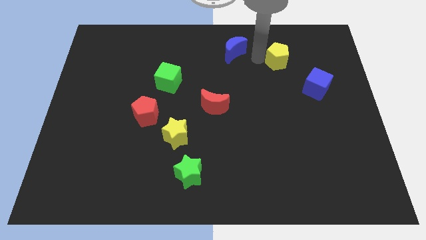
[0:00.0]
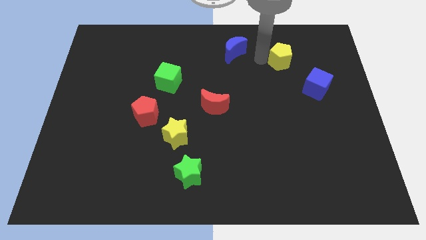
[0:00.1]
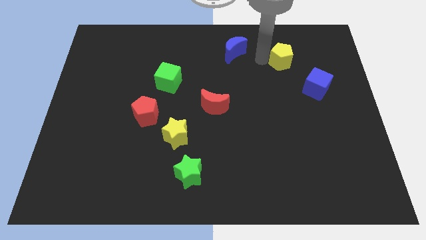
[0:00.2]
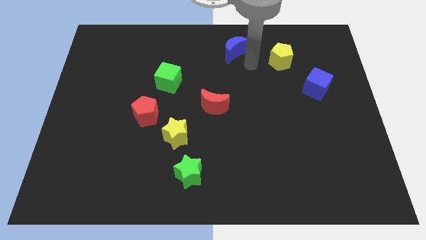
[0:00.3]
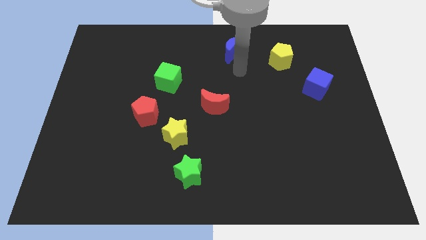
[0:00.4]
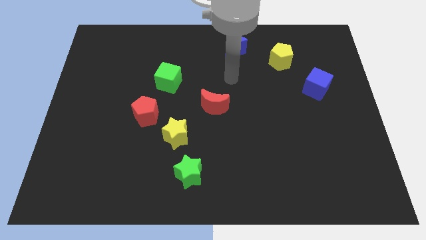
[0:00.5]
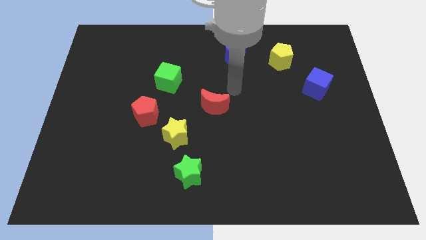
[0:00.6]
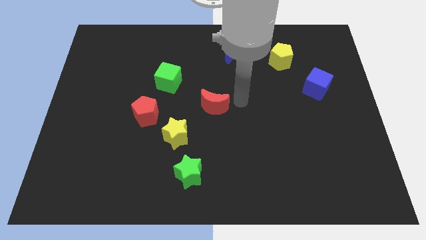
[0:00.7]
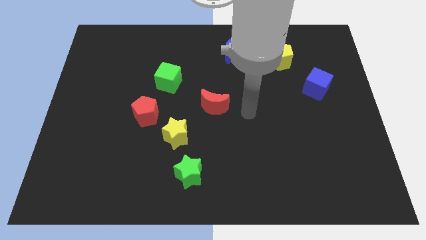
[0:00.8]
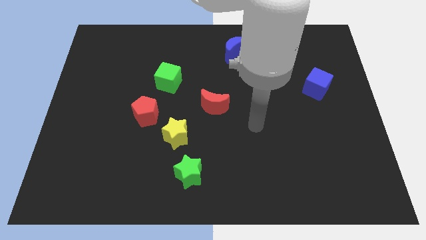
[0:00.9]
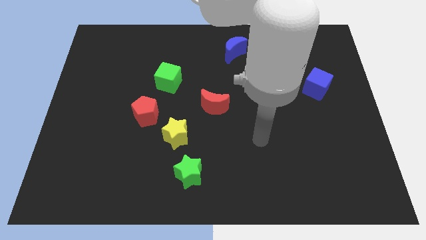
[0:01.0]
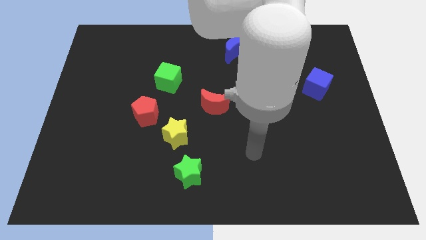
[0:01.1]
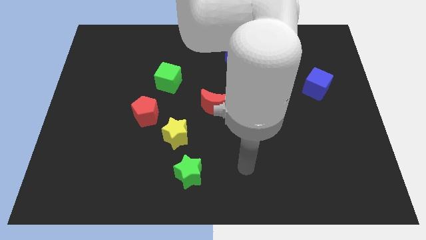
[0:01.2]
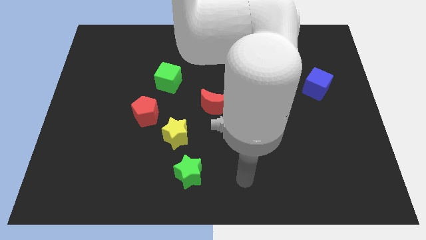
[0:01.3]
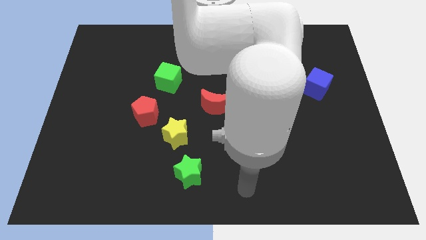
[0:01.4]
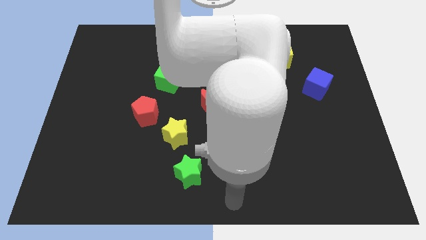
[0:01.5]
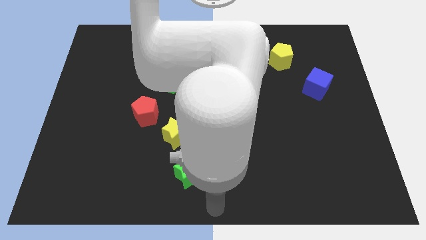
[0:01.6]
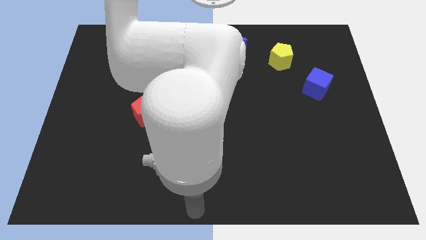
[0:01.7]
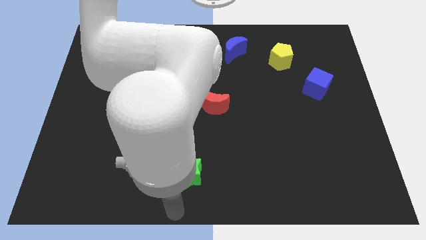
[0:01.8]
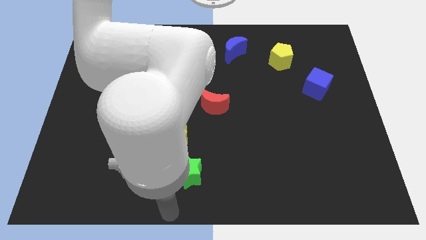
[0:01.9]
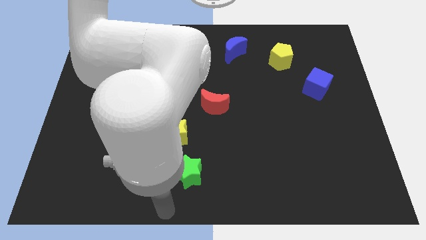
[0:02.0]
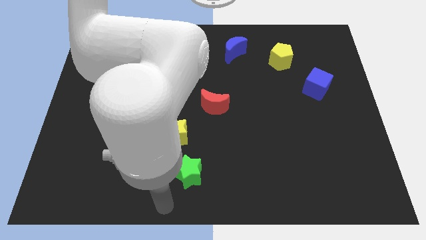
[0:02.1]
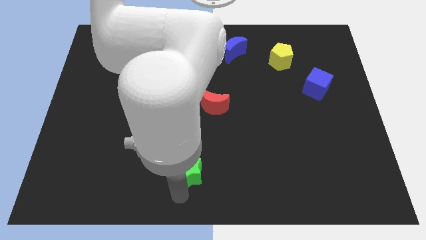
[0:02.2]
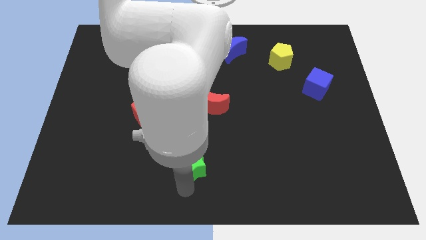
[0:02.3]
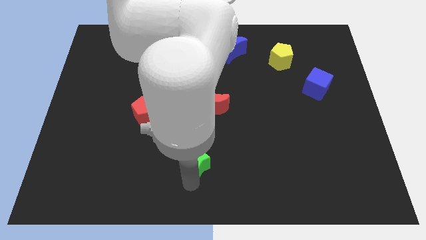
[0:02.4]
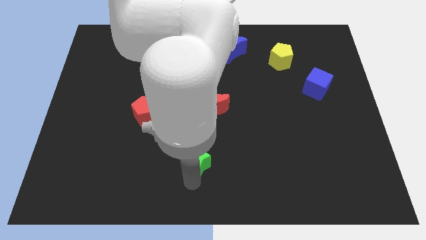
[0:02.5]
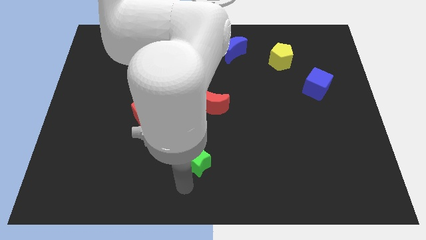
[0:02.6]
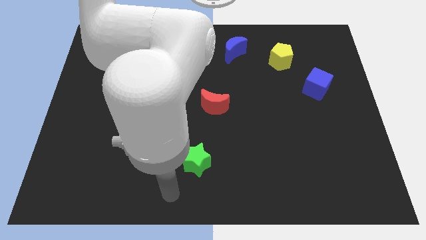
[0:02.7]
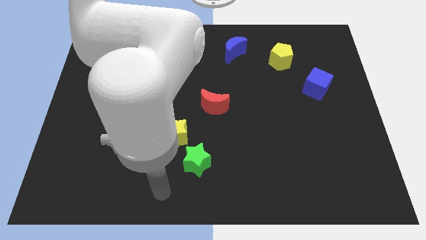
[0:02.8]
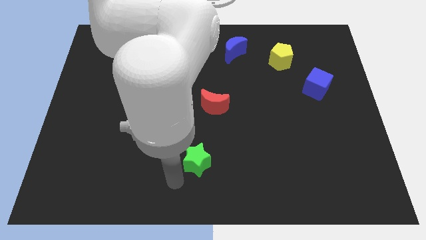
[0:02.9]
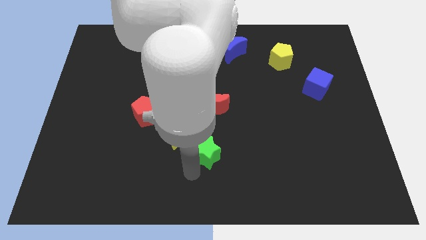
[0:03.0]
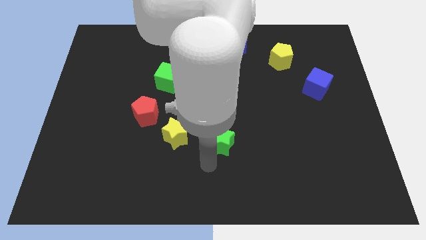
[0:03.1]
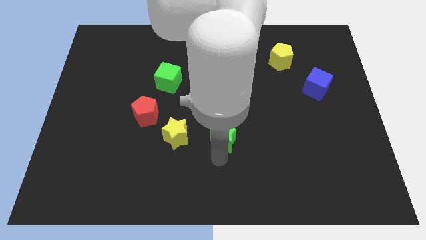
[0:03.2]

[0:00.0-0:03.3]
move green star slightly up

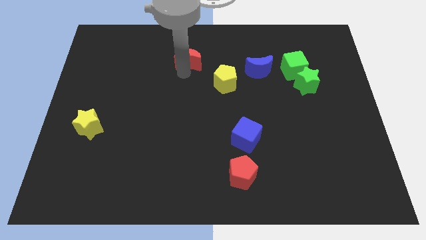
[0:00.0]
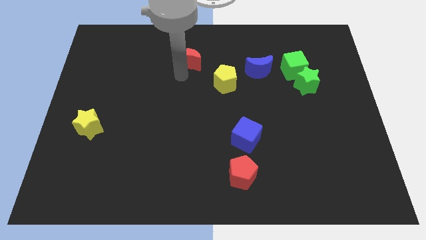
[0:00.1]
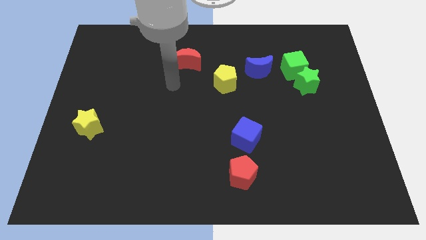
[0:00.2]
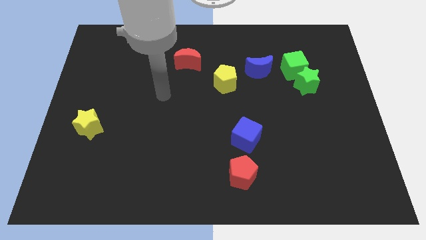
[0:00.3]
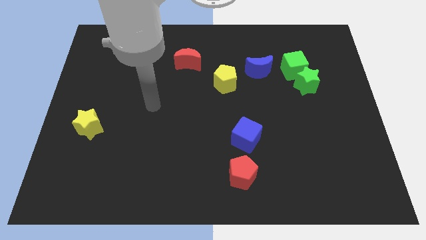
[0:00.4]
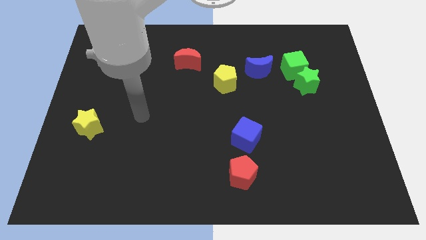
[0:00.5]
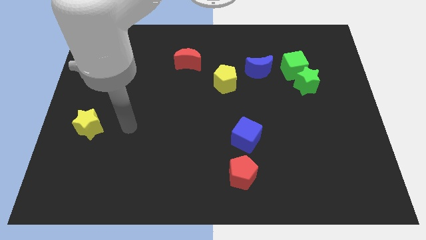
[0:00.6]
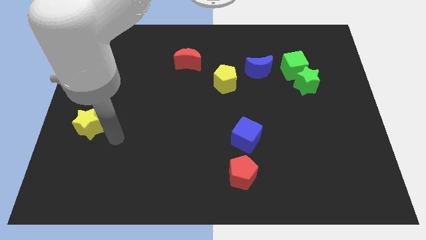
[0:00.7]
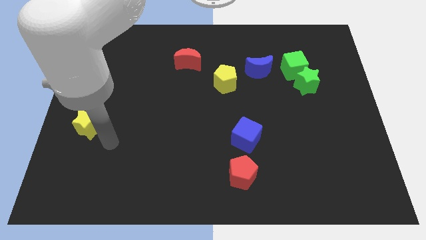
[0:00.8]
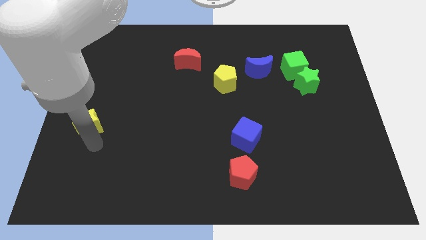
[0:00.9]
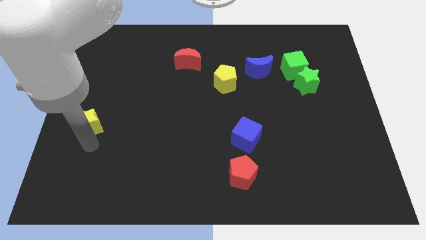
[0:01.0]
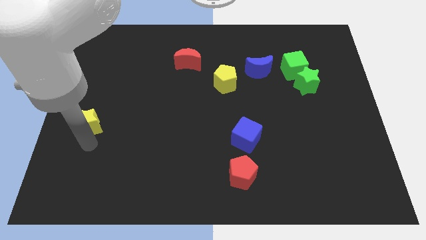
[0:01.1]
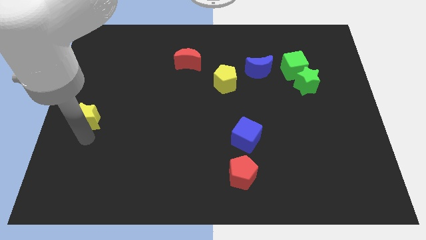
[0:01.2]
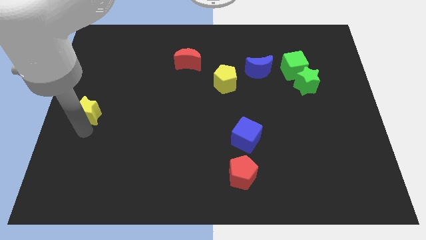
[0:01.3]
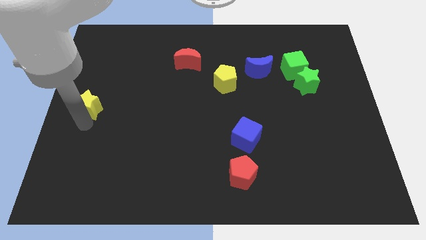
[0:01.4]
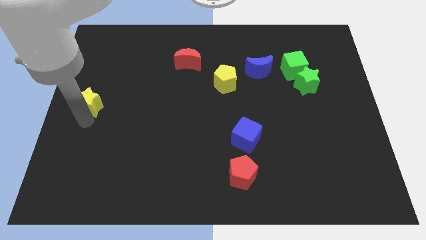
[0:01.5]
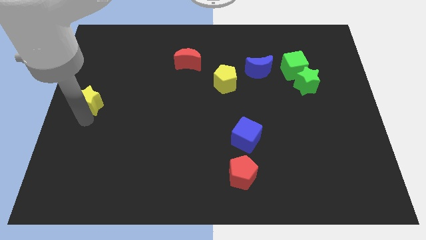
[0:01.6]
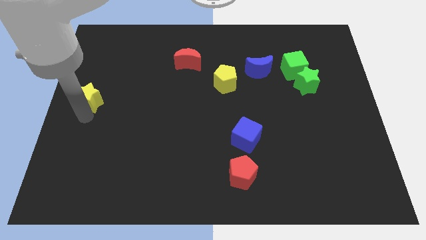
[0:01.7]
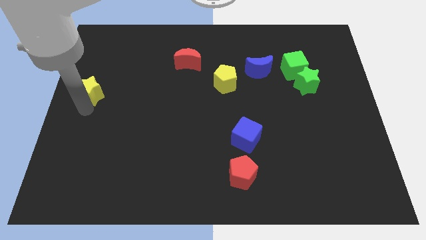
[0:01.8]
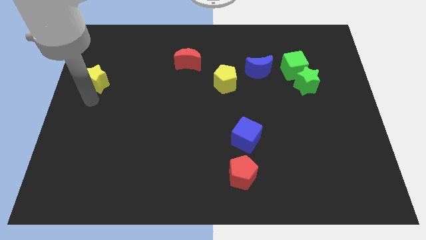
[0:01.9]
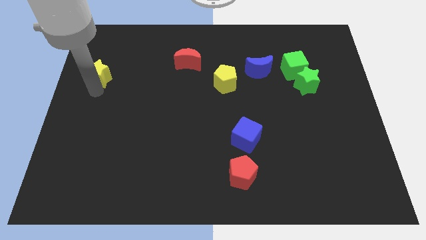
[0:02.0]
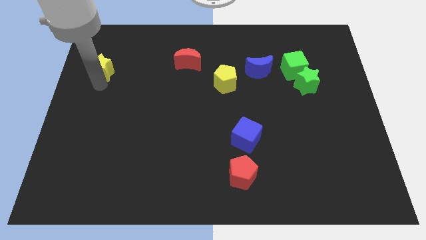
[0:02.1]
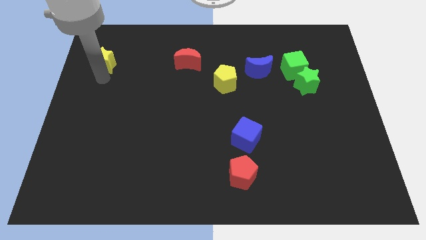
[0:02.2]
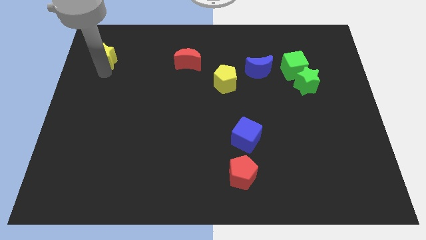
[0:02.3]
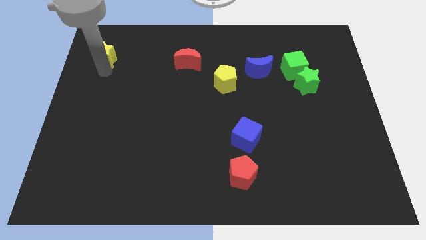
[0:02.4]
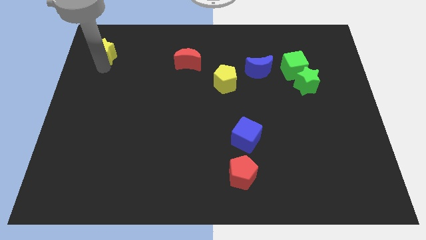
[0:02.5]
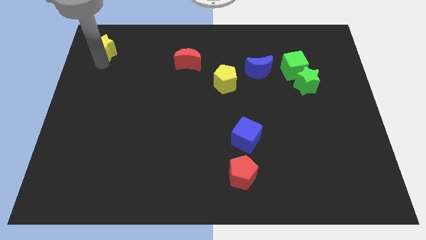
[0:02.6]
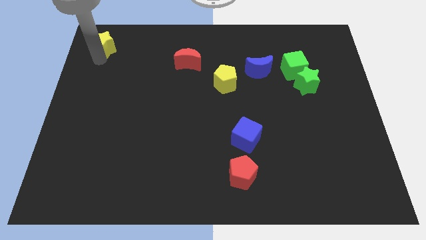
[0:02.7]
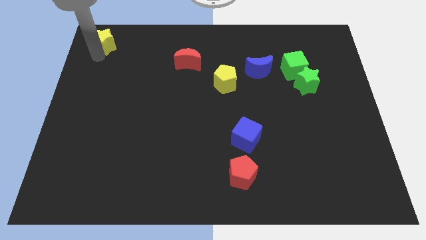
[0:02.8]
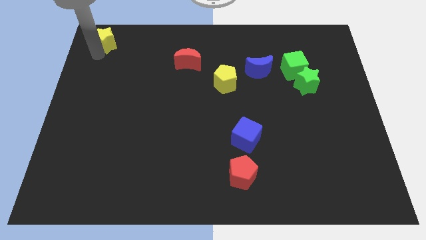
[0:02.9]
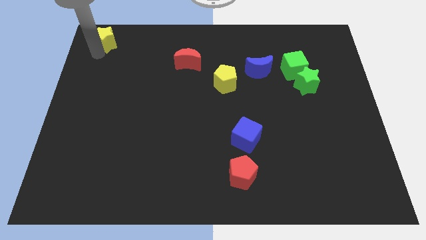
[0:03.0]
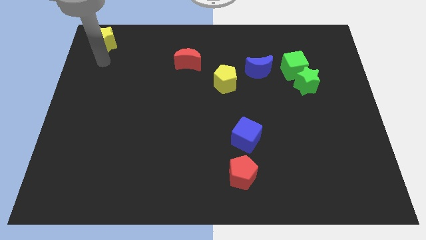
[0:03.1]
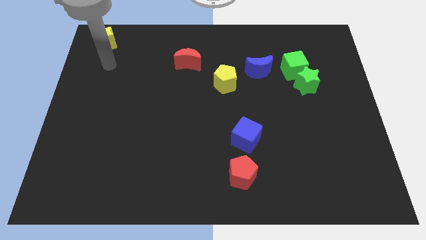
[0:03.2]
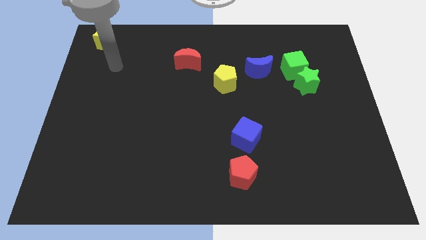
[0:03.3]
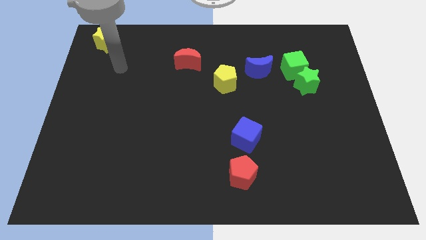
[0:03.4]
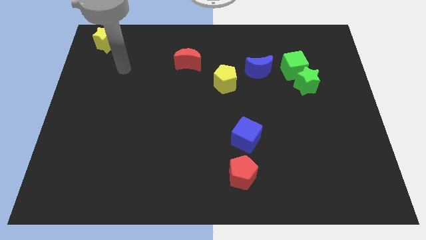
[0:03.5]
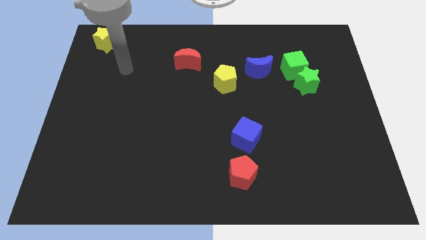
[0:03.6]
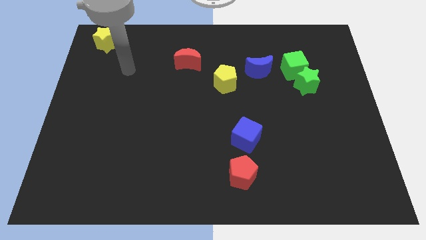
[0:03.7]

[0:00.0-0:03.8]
move the yellow star at the top left of the table

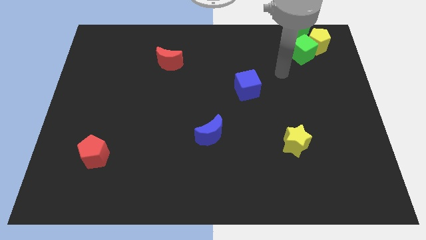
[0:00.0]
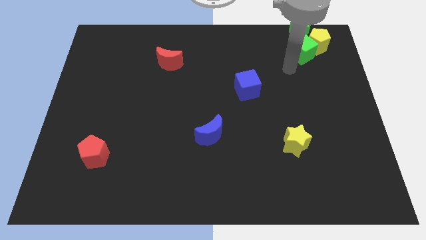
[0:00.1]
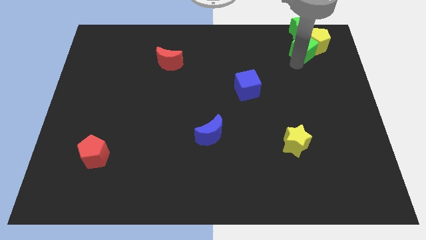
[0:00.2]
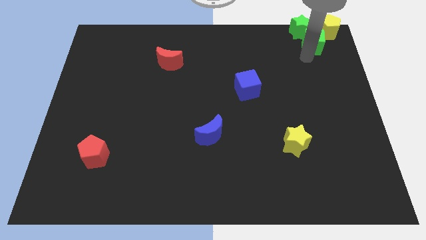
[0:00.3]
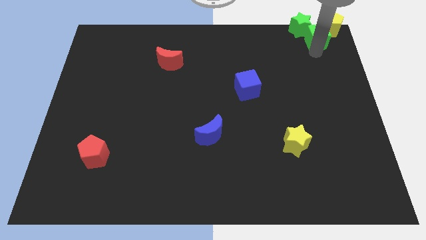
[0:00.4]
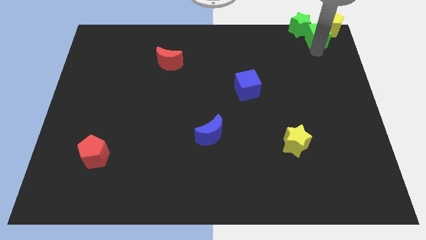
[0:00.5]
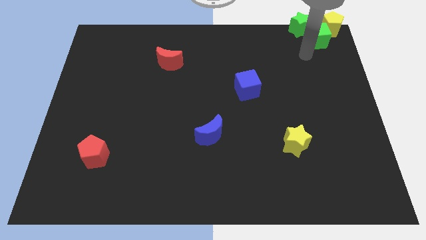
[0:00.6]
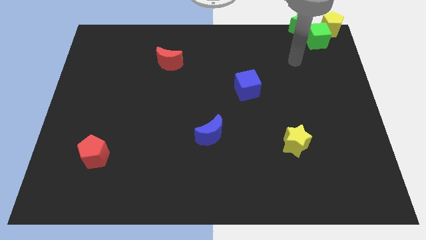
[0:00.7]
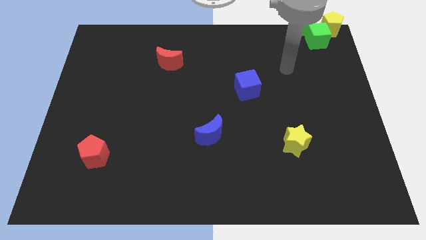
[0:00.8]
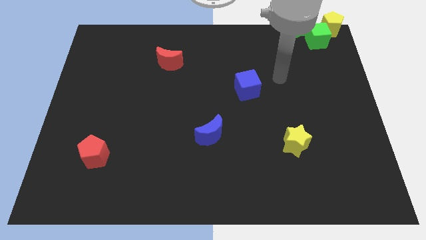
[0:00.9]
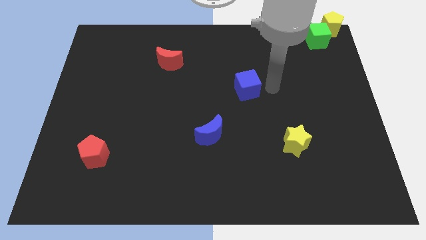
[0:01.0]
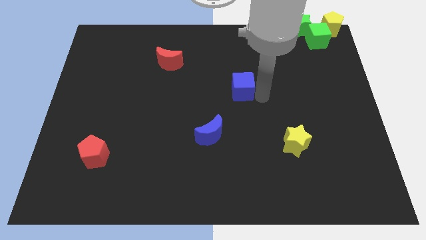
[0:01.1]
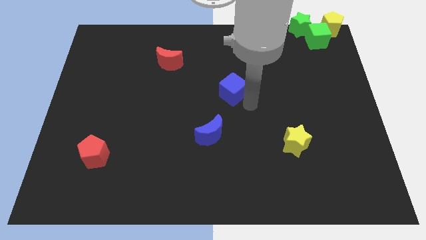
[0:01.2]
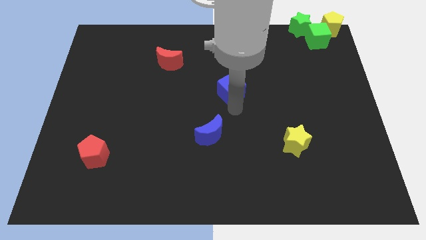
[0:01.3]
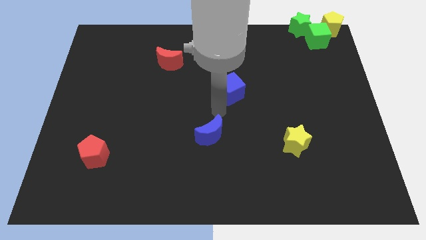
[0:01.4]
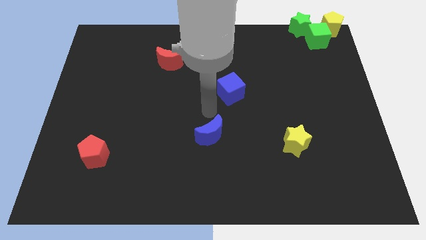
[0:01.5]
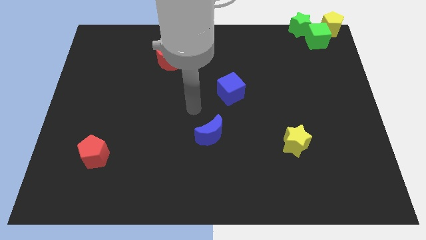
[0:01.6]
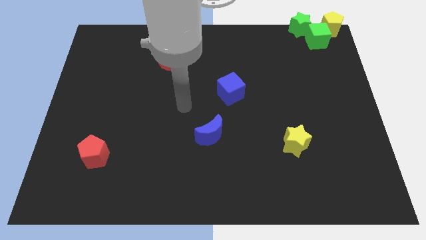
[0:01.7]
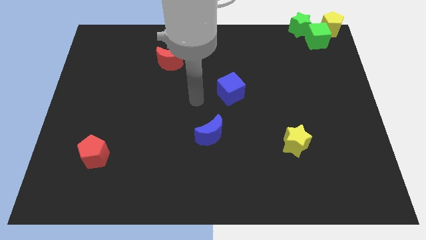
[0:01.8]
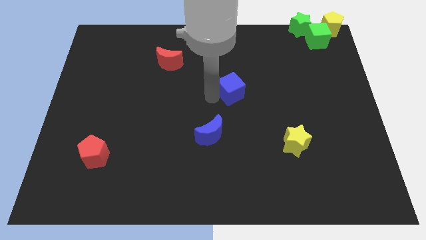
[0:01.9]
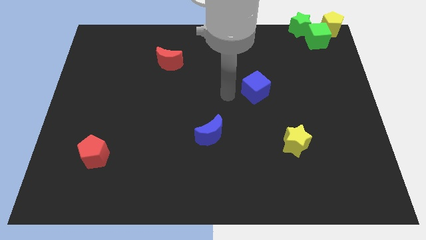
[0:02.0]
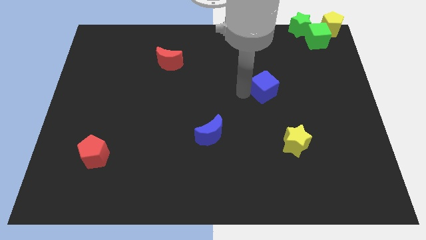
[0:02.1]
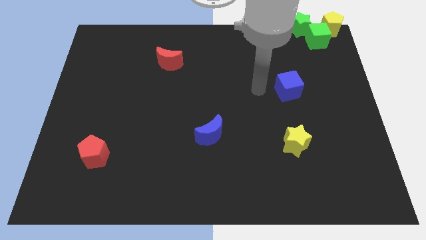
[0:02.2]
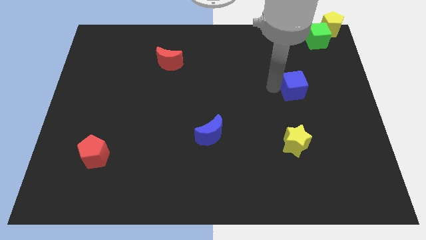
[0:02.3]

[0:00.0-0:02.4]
place the blue cube above the yellow star
